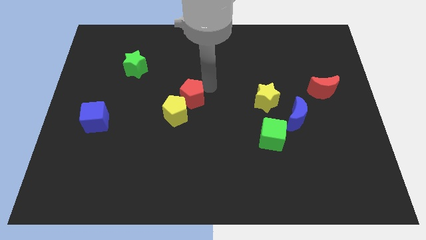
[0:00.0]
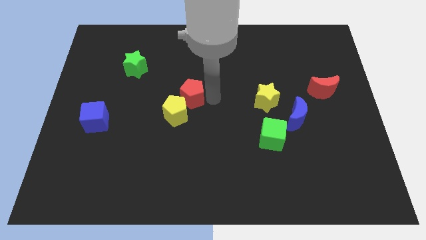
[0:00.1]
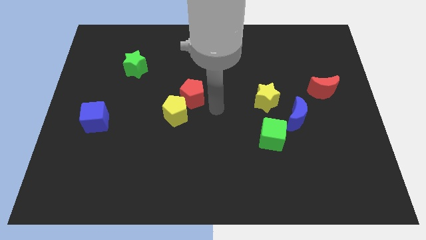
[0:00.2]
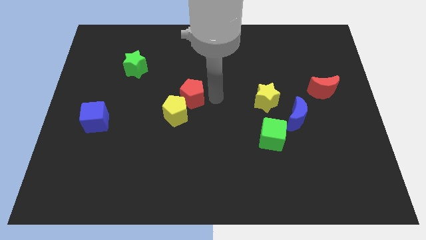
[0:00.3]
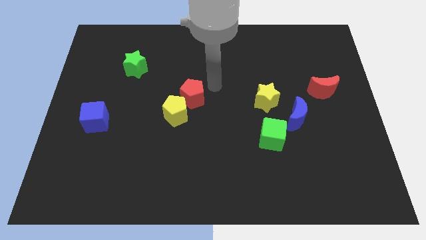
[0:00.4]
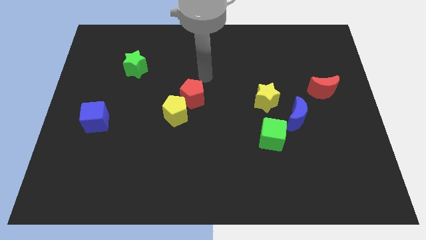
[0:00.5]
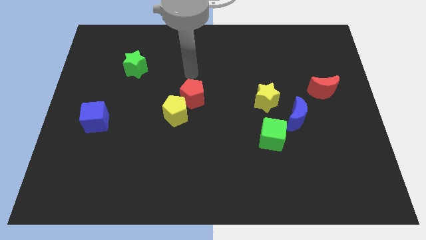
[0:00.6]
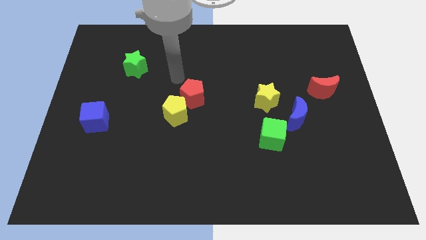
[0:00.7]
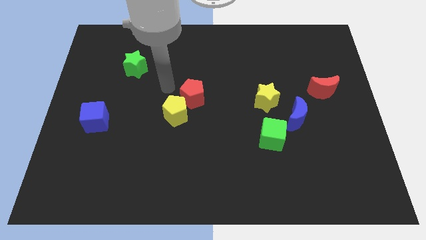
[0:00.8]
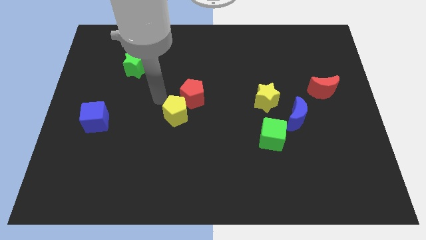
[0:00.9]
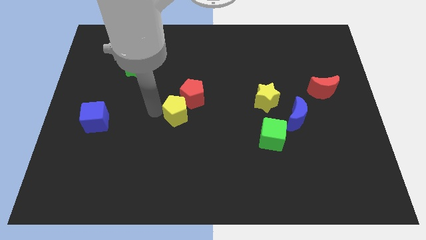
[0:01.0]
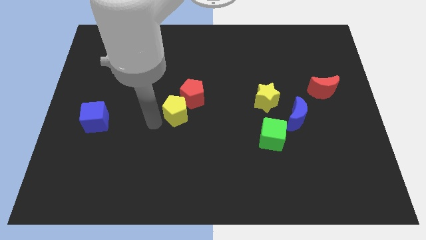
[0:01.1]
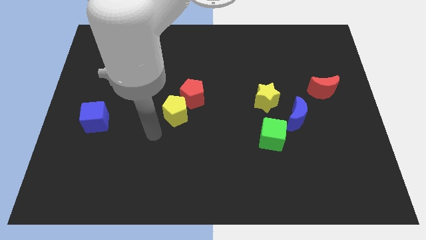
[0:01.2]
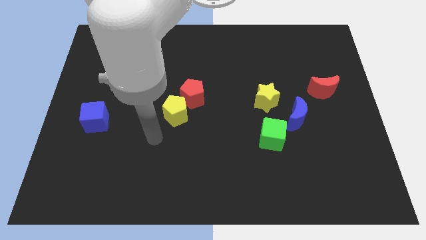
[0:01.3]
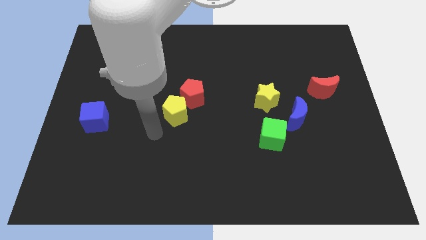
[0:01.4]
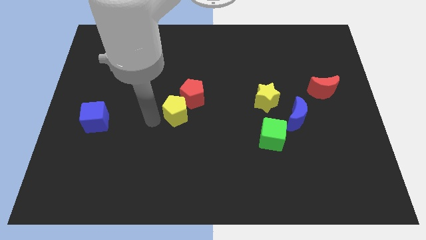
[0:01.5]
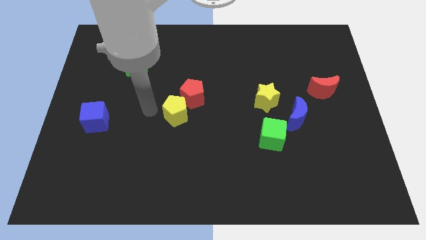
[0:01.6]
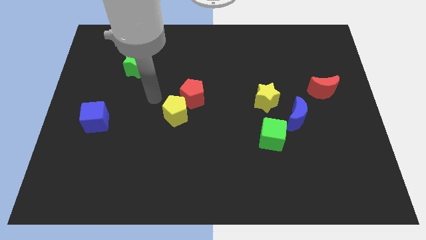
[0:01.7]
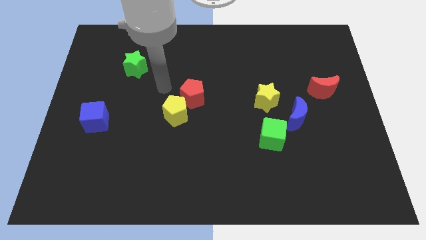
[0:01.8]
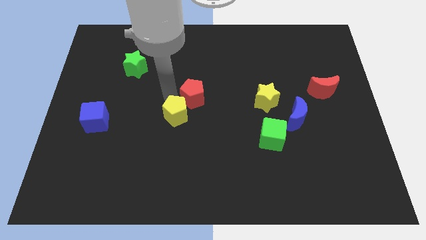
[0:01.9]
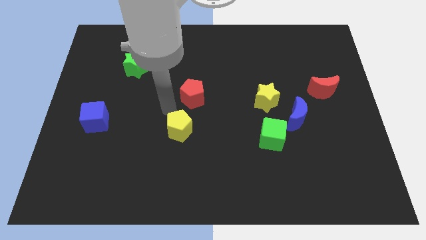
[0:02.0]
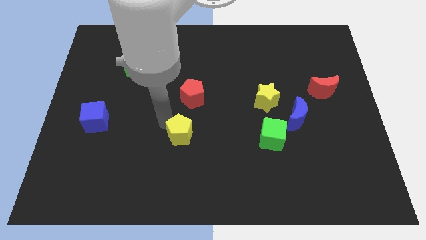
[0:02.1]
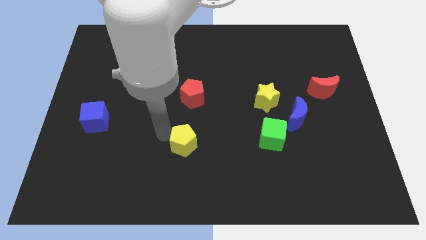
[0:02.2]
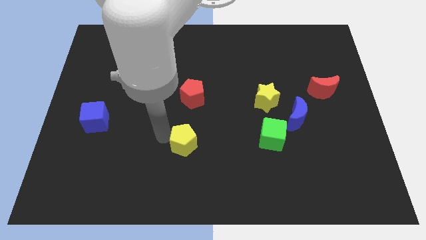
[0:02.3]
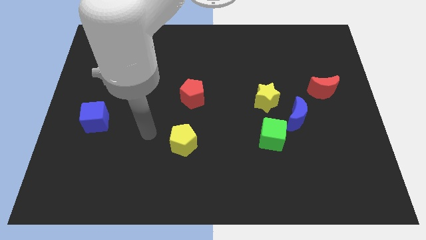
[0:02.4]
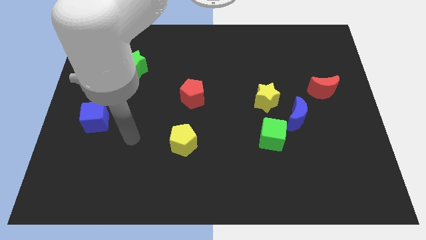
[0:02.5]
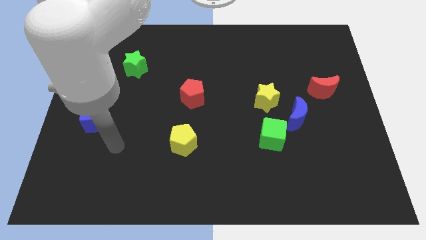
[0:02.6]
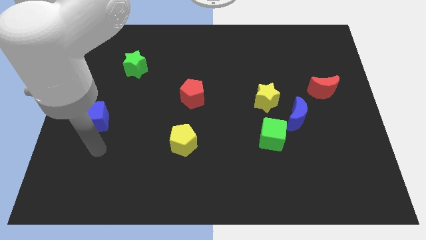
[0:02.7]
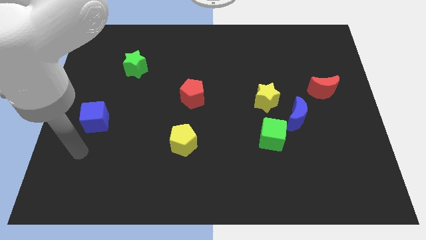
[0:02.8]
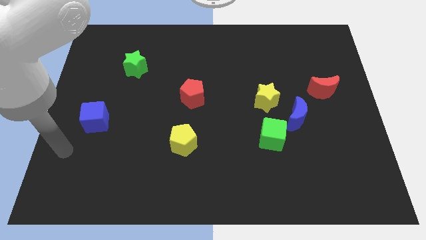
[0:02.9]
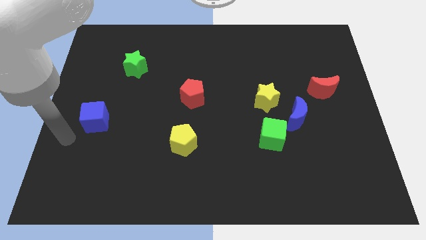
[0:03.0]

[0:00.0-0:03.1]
place the yellow pentagon vertically below the red pentagon

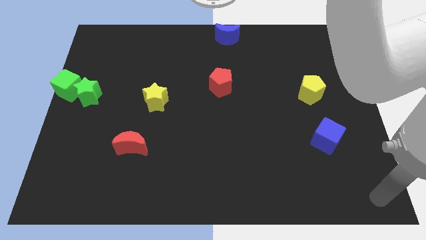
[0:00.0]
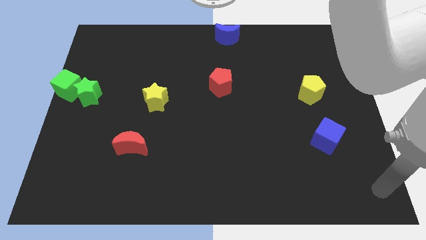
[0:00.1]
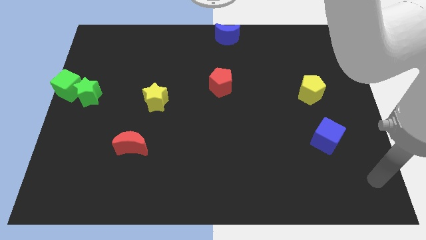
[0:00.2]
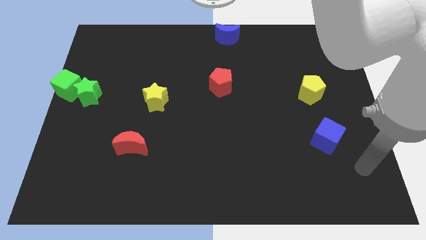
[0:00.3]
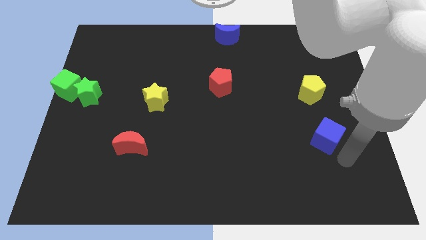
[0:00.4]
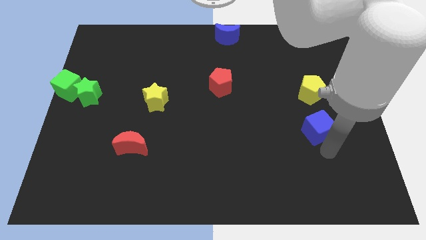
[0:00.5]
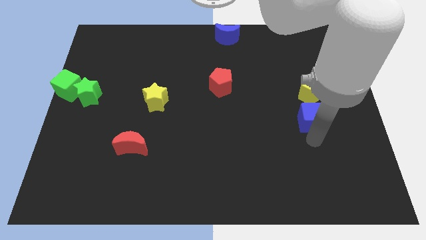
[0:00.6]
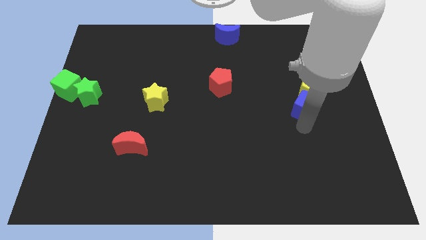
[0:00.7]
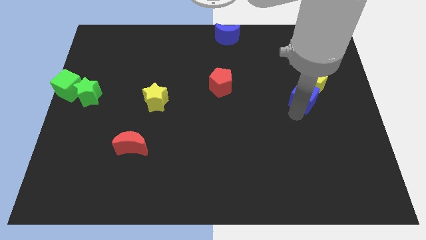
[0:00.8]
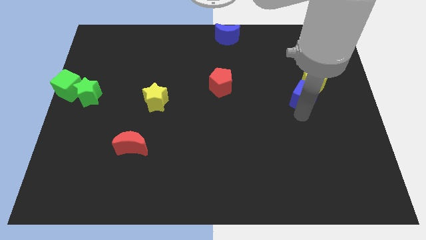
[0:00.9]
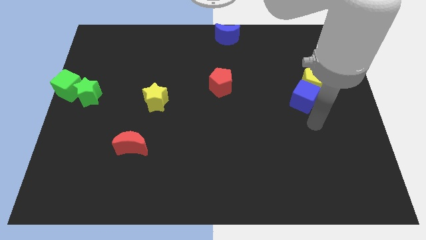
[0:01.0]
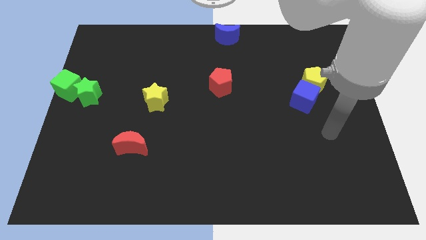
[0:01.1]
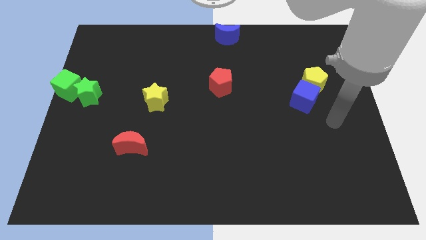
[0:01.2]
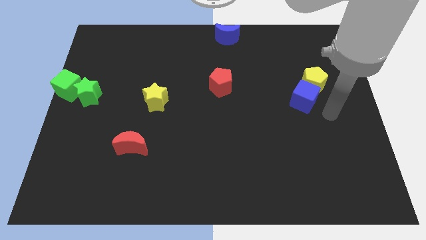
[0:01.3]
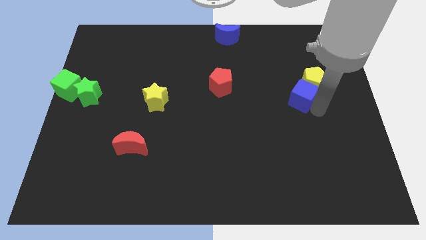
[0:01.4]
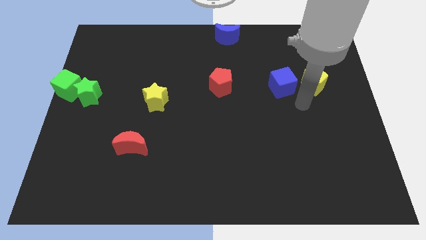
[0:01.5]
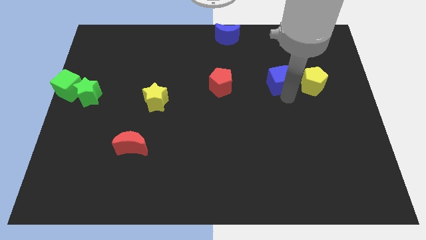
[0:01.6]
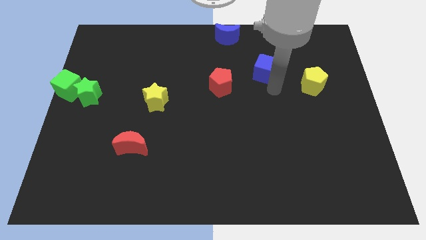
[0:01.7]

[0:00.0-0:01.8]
move the blue cube to the left of the yellow pentagon

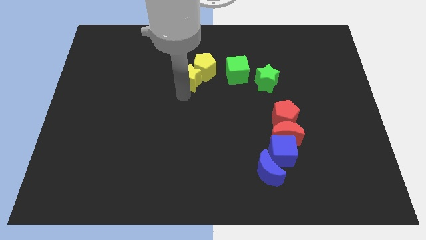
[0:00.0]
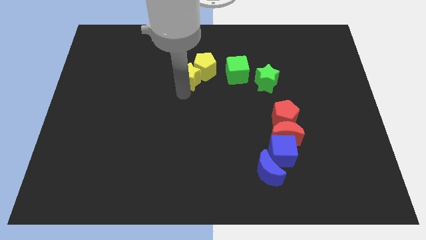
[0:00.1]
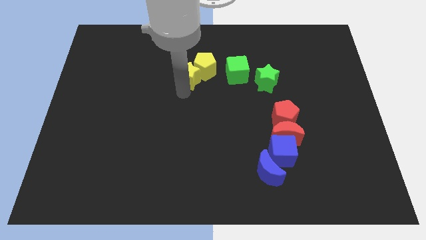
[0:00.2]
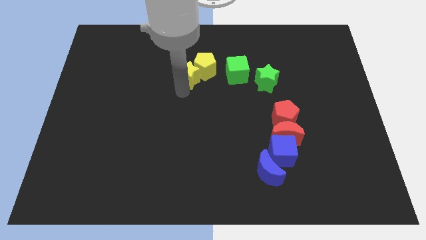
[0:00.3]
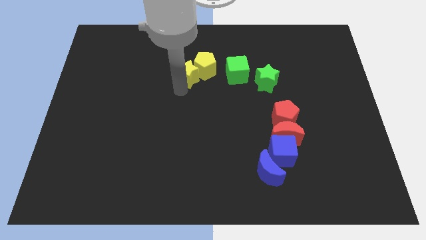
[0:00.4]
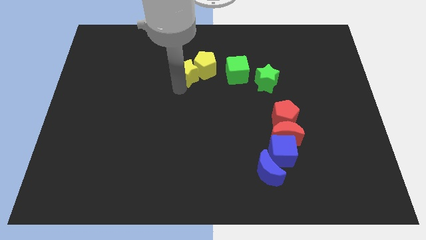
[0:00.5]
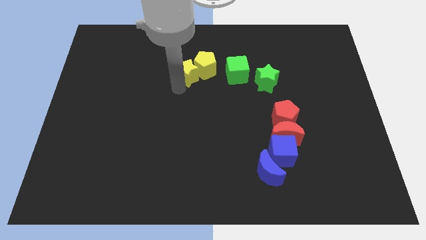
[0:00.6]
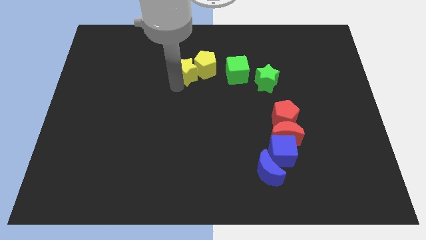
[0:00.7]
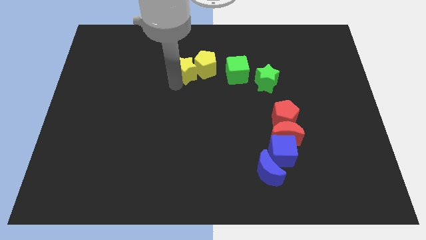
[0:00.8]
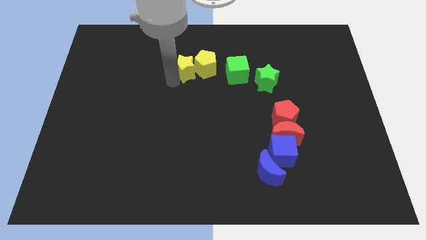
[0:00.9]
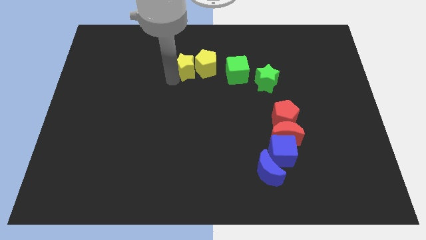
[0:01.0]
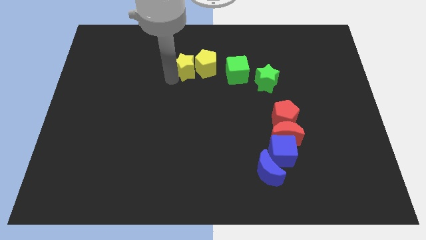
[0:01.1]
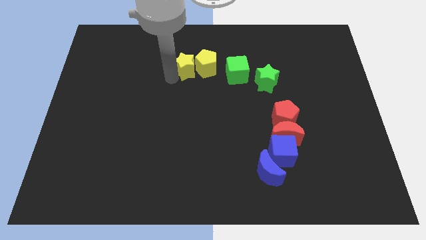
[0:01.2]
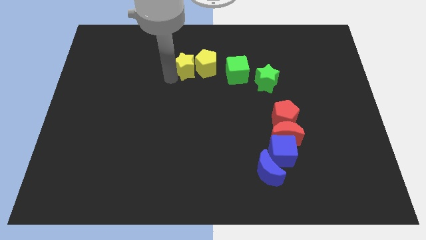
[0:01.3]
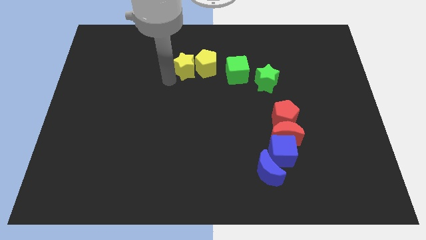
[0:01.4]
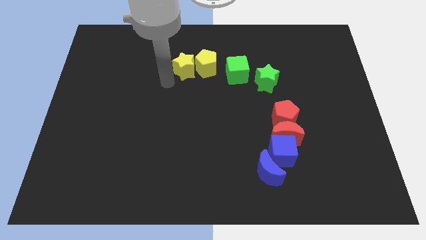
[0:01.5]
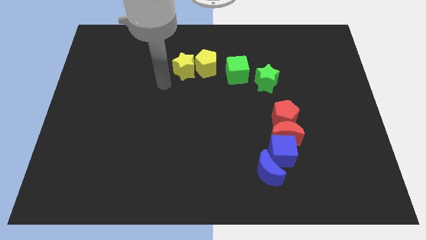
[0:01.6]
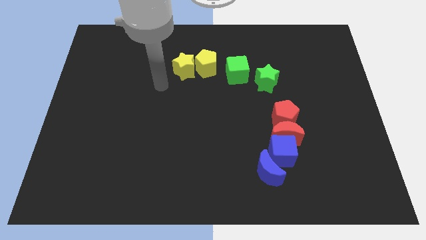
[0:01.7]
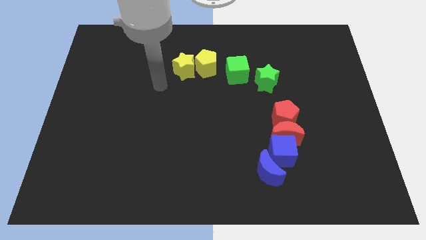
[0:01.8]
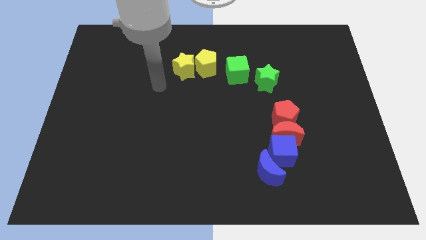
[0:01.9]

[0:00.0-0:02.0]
move the yellow star to the left side of the yellow pentagon

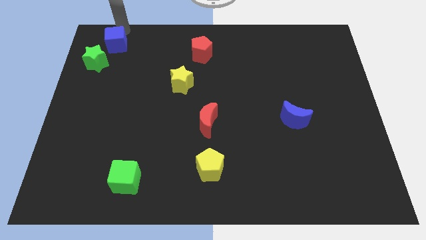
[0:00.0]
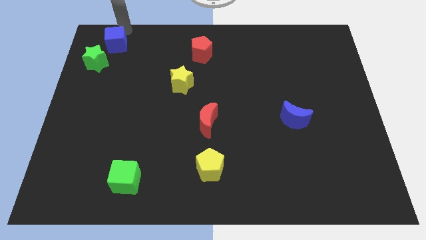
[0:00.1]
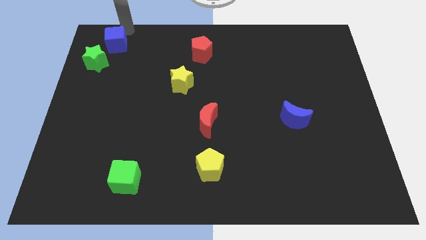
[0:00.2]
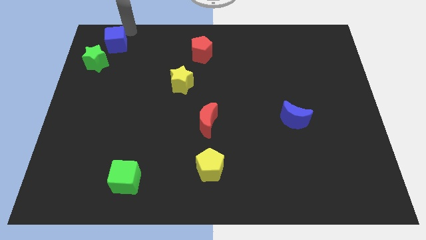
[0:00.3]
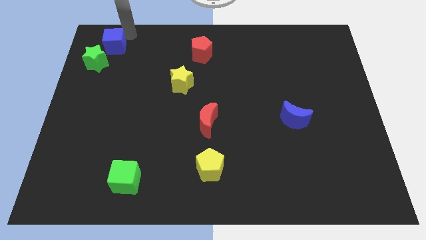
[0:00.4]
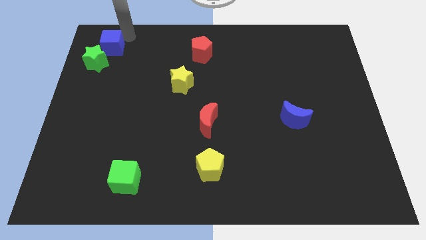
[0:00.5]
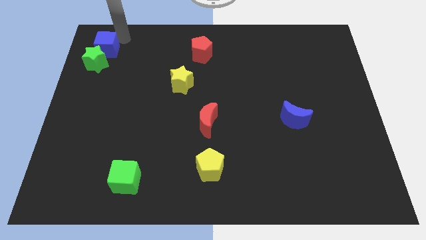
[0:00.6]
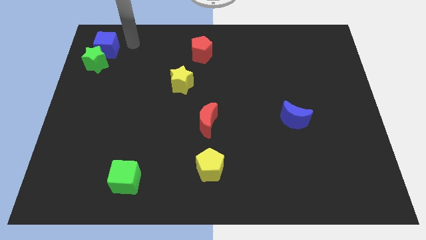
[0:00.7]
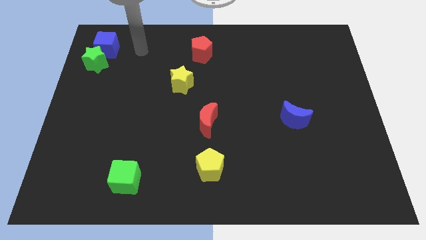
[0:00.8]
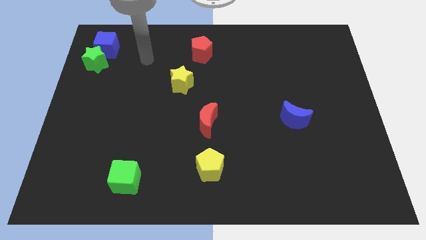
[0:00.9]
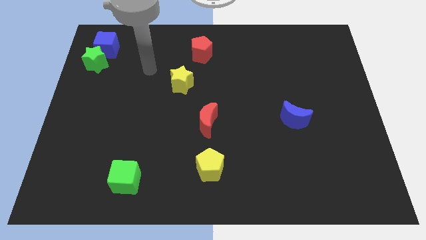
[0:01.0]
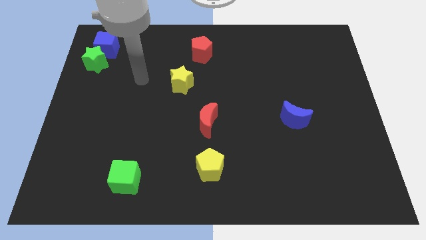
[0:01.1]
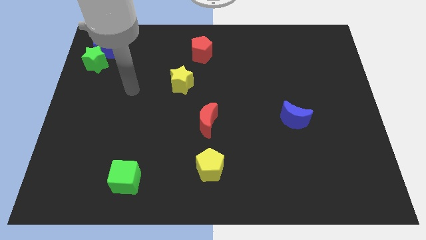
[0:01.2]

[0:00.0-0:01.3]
move the blue cube into green star

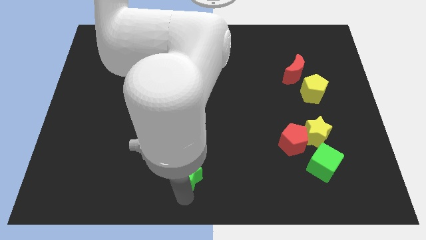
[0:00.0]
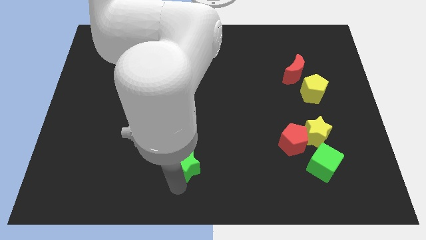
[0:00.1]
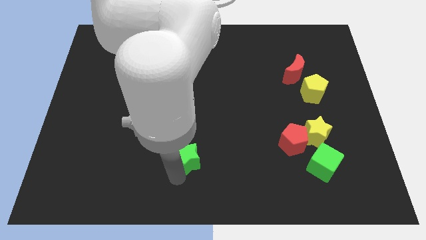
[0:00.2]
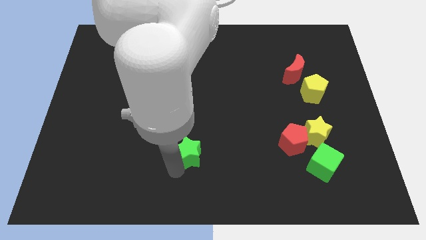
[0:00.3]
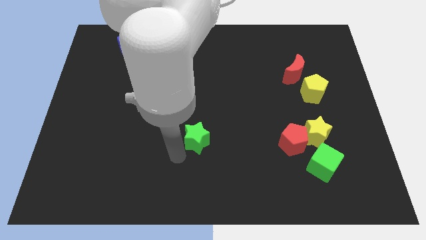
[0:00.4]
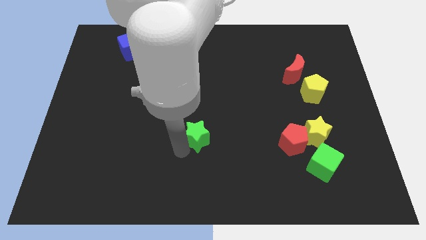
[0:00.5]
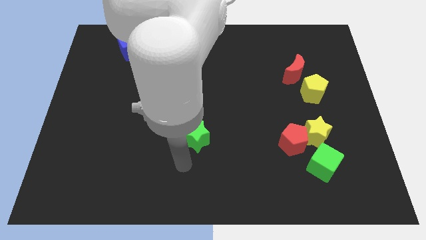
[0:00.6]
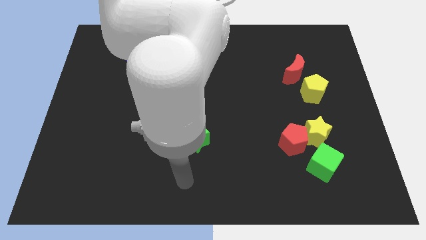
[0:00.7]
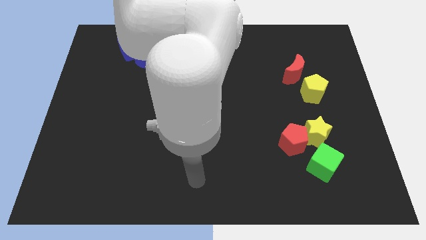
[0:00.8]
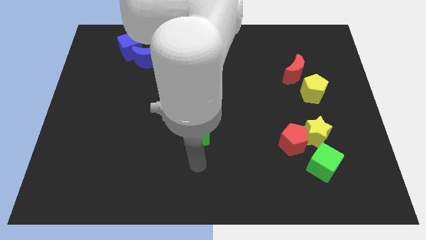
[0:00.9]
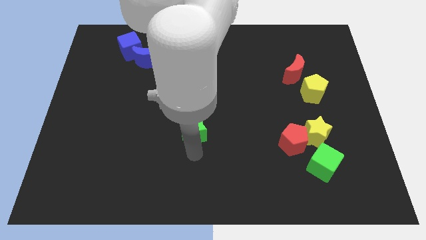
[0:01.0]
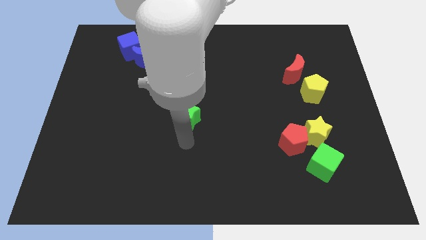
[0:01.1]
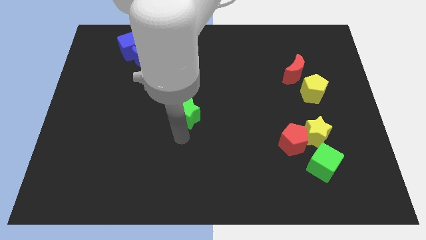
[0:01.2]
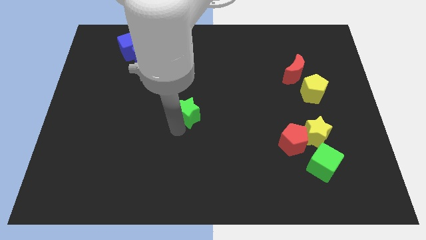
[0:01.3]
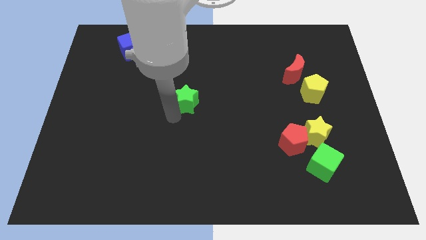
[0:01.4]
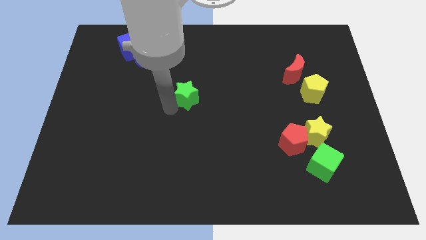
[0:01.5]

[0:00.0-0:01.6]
drag the green star towards top side of the board
